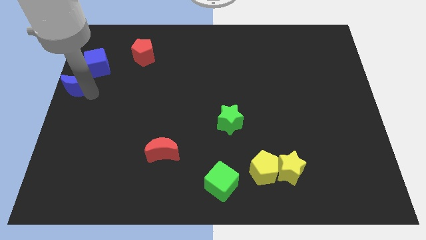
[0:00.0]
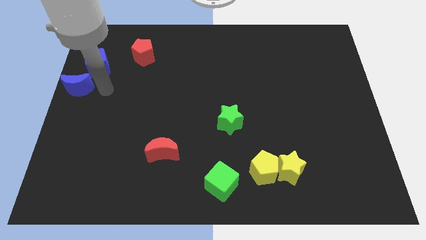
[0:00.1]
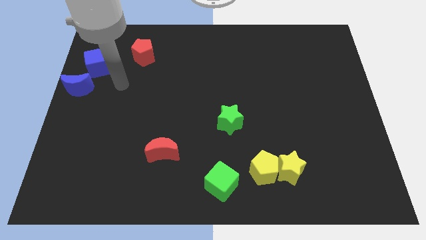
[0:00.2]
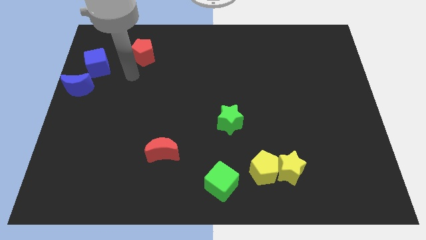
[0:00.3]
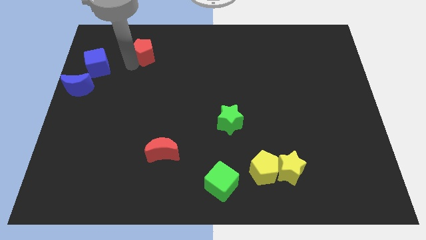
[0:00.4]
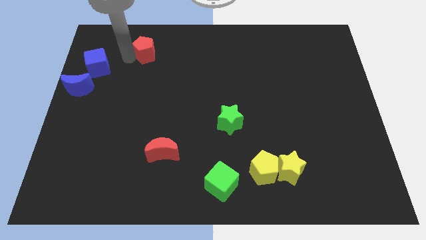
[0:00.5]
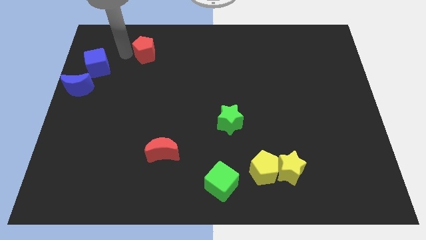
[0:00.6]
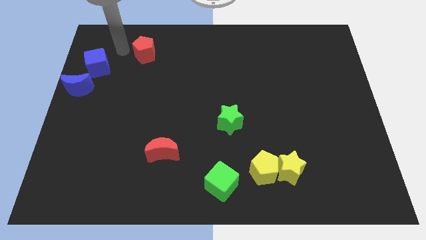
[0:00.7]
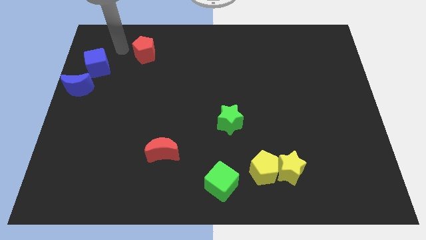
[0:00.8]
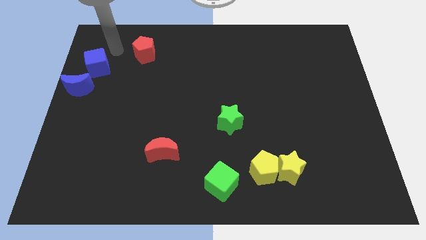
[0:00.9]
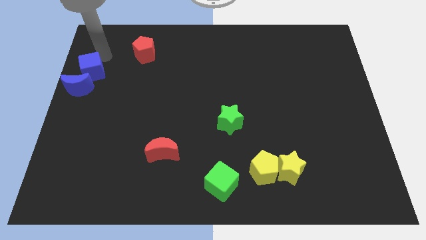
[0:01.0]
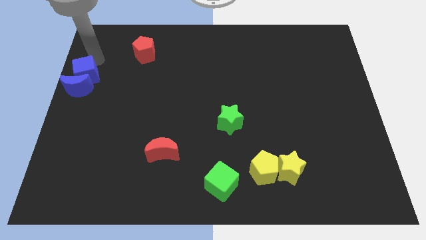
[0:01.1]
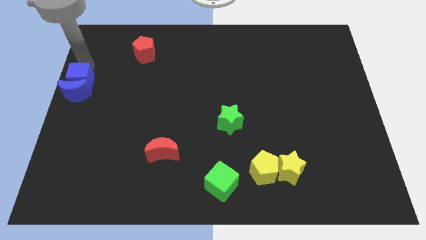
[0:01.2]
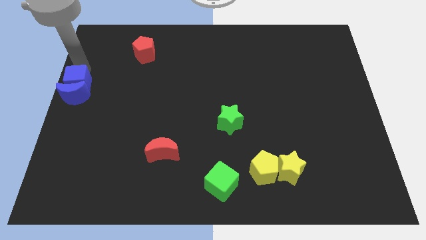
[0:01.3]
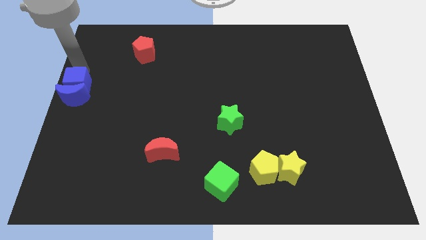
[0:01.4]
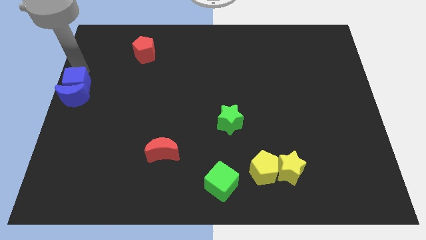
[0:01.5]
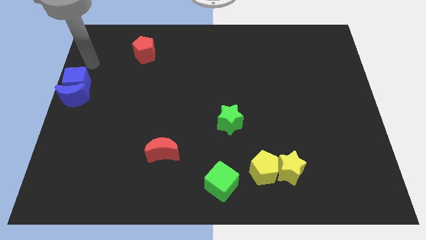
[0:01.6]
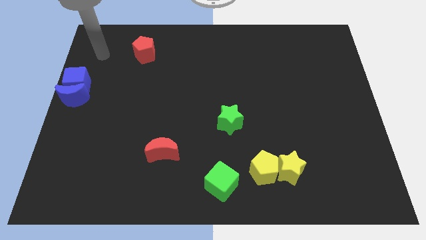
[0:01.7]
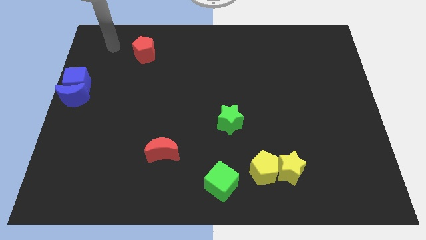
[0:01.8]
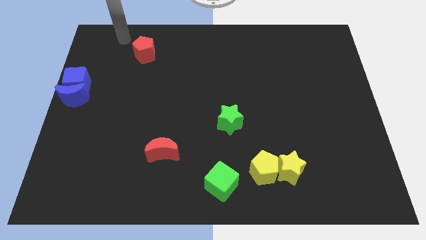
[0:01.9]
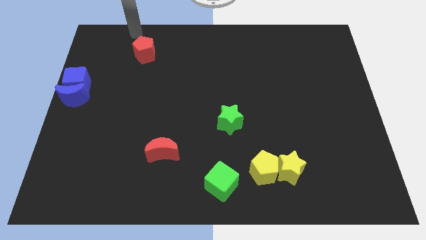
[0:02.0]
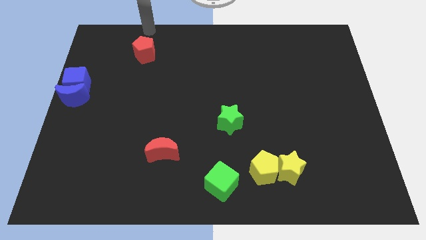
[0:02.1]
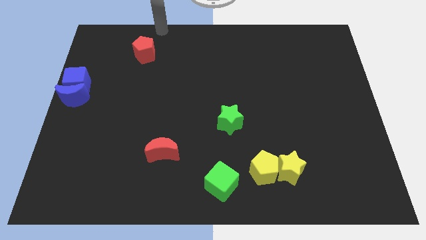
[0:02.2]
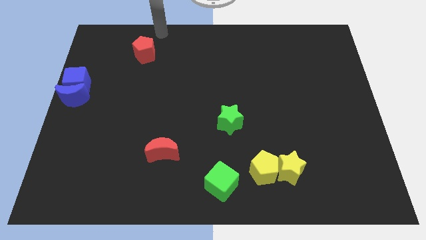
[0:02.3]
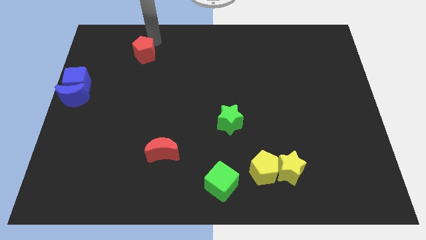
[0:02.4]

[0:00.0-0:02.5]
move the blue cube into the blue crescent

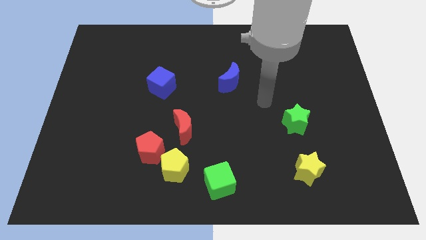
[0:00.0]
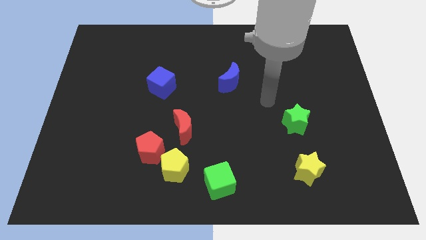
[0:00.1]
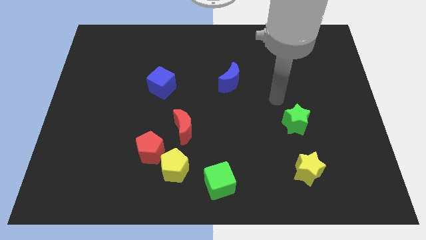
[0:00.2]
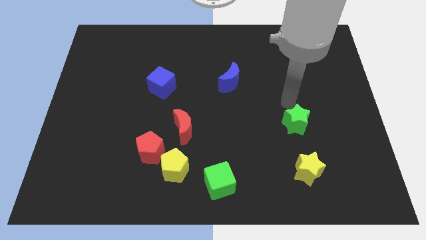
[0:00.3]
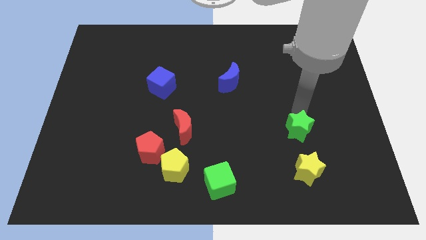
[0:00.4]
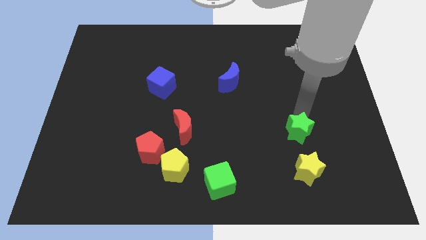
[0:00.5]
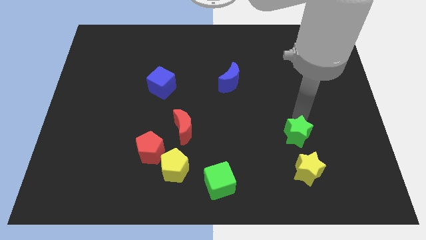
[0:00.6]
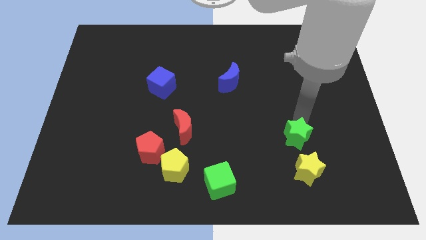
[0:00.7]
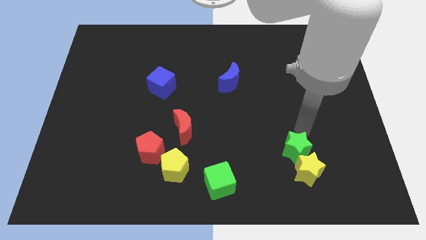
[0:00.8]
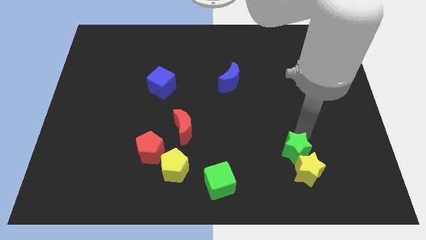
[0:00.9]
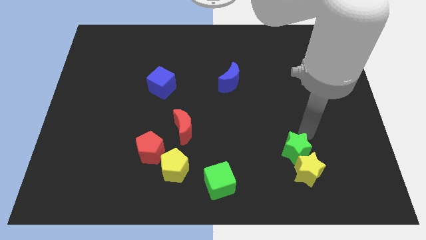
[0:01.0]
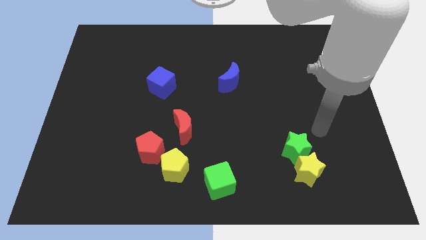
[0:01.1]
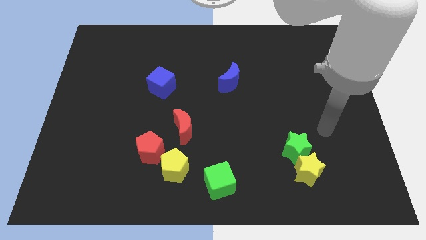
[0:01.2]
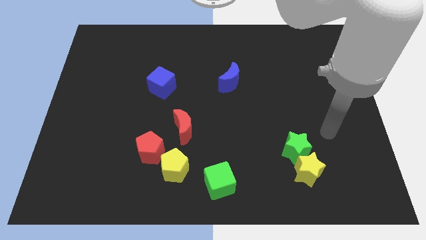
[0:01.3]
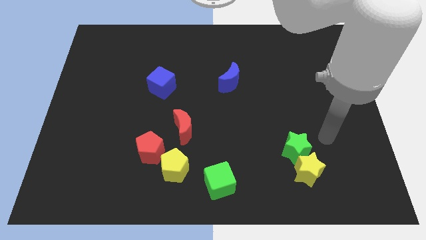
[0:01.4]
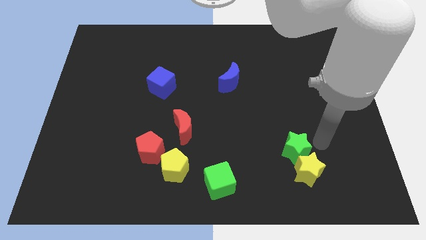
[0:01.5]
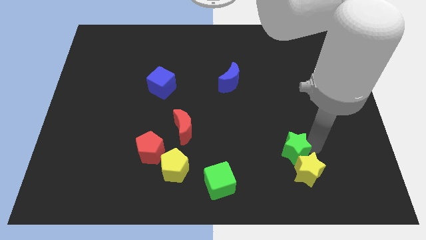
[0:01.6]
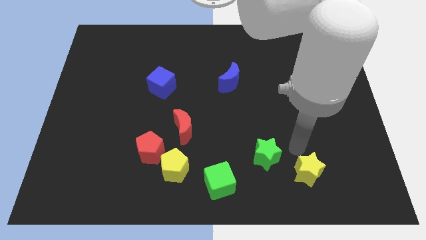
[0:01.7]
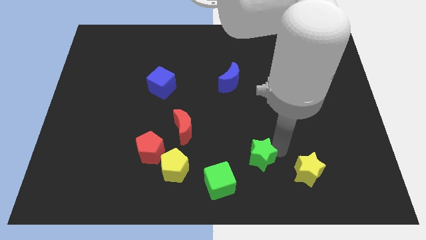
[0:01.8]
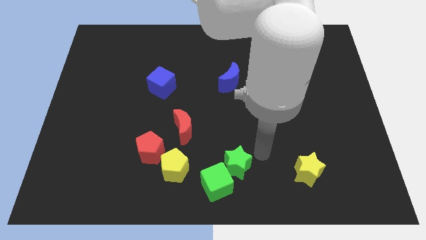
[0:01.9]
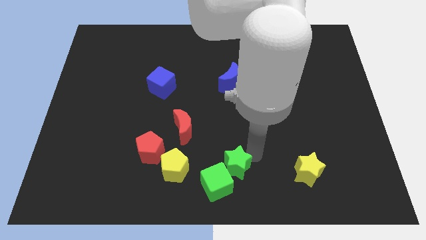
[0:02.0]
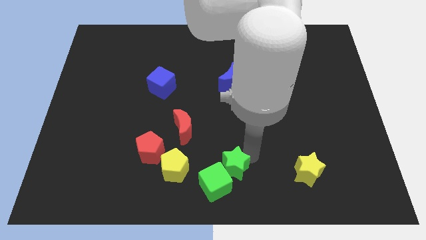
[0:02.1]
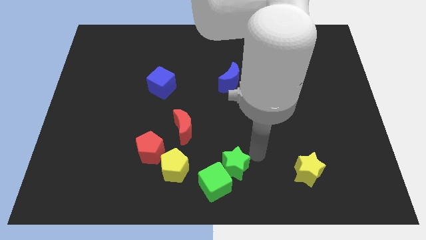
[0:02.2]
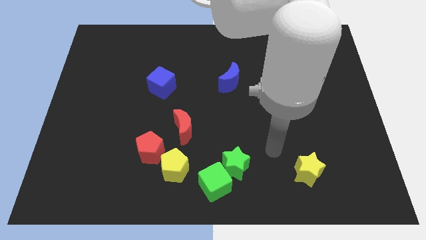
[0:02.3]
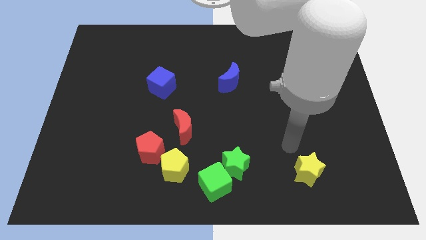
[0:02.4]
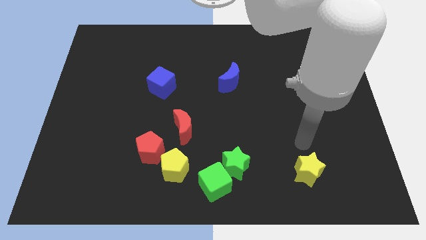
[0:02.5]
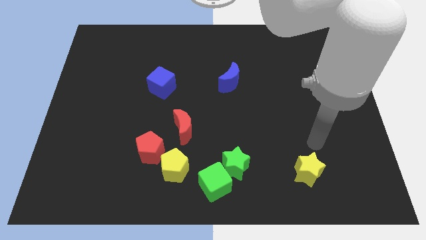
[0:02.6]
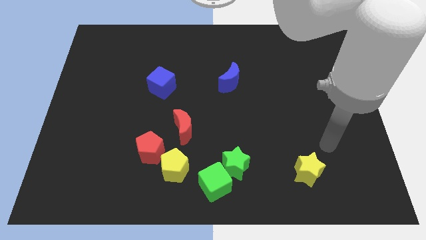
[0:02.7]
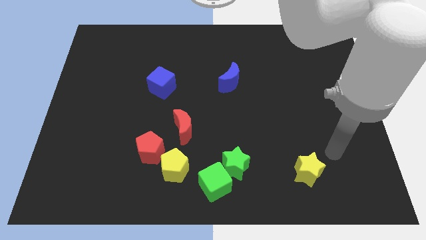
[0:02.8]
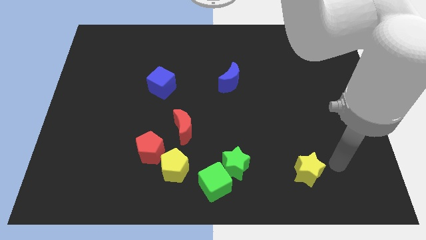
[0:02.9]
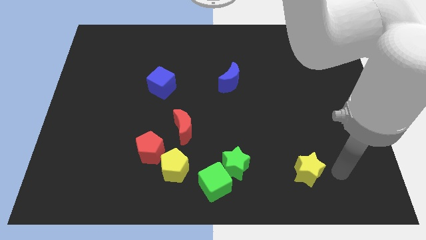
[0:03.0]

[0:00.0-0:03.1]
move green star into green cube

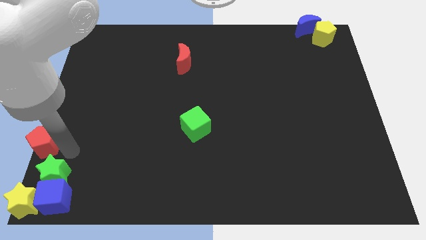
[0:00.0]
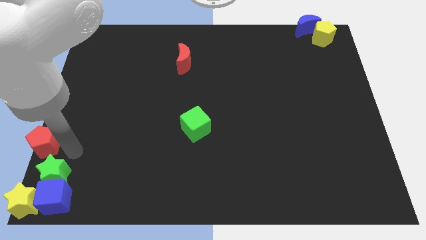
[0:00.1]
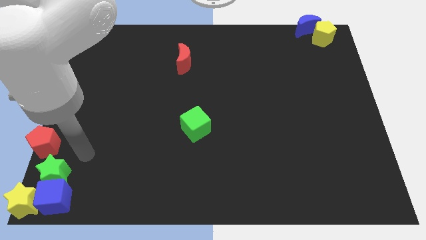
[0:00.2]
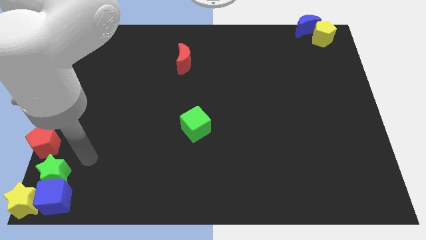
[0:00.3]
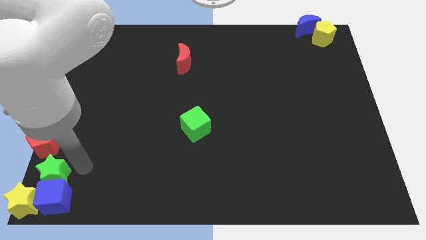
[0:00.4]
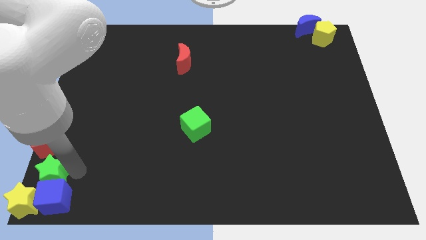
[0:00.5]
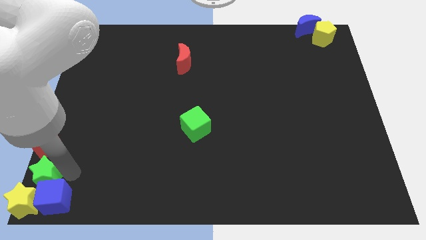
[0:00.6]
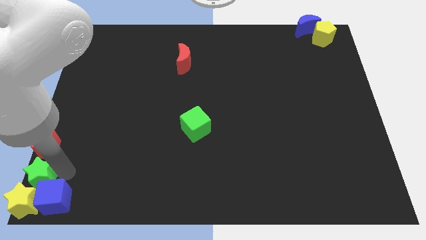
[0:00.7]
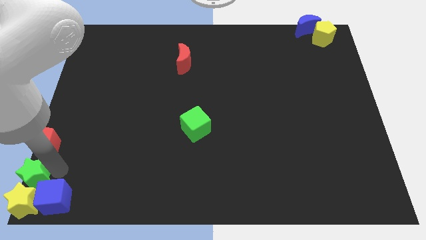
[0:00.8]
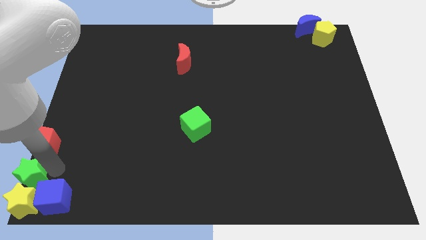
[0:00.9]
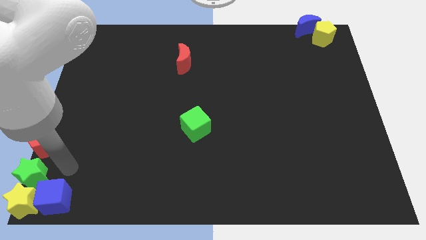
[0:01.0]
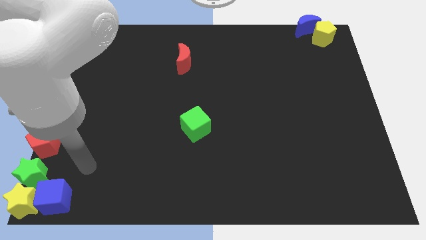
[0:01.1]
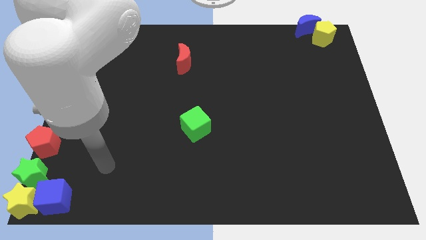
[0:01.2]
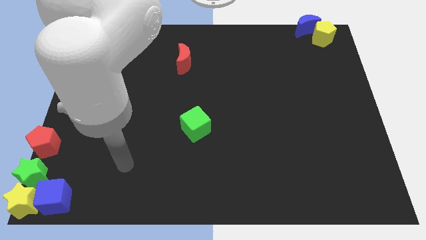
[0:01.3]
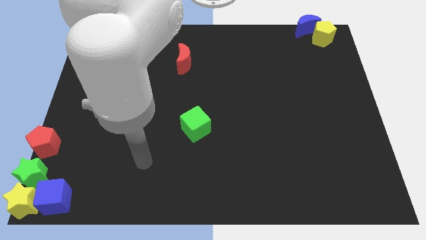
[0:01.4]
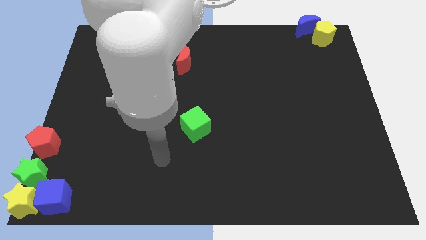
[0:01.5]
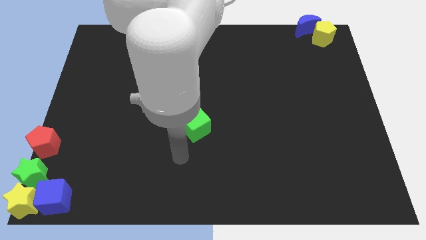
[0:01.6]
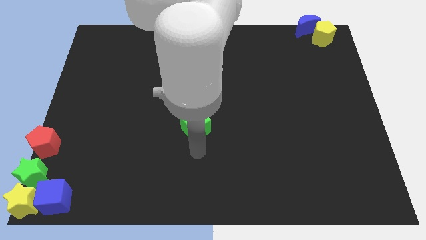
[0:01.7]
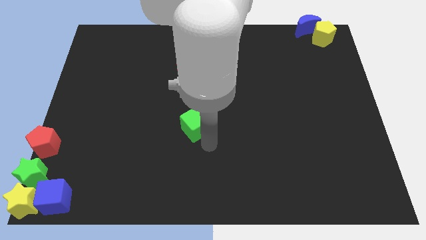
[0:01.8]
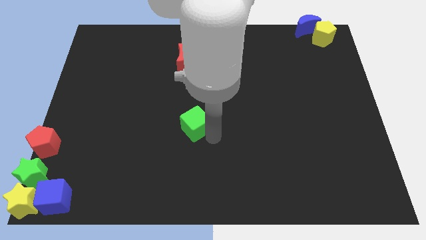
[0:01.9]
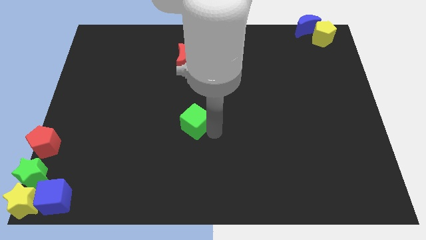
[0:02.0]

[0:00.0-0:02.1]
touch the bottom of the green cube

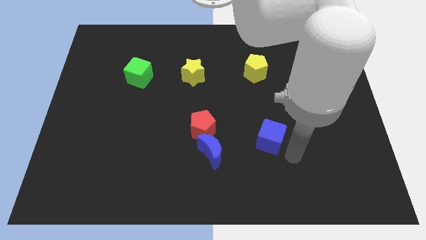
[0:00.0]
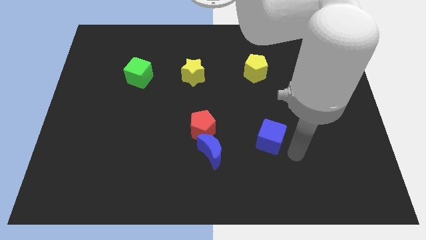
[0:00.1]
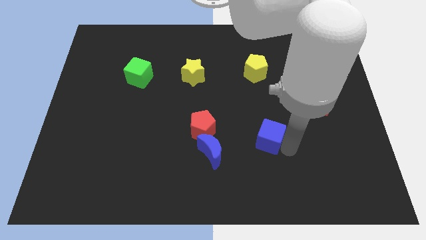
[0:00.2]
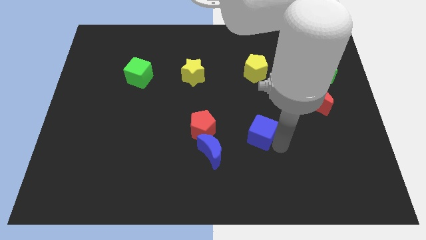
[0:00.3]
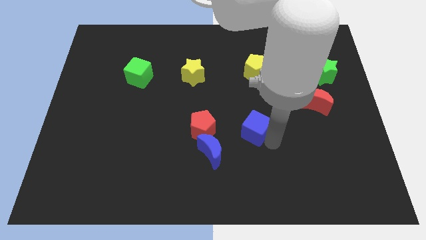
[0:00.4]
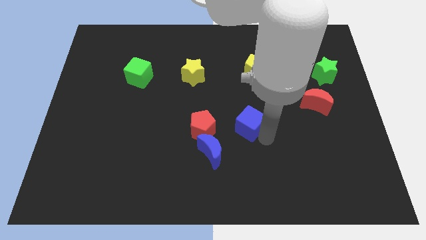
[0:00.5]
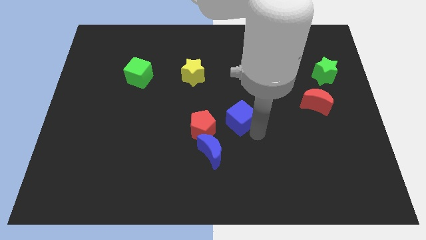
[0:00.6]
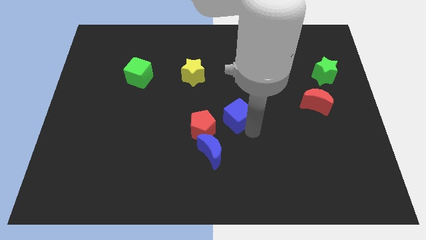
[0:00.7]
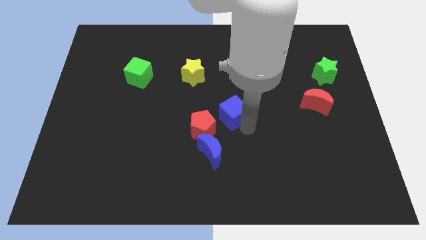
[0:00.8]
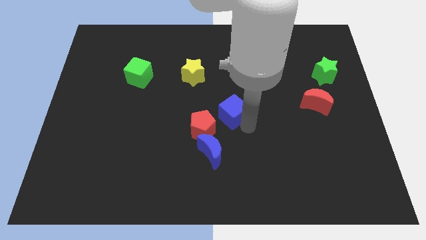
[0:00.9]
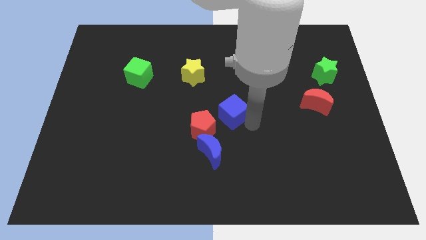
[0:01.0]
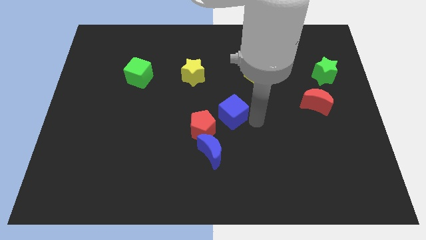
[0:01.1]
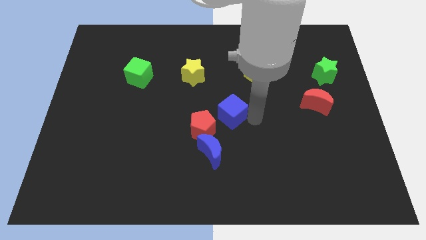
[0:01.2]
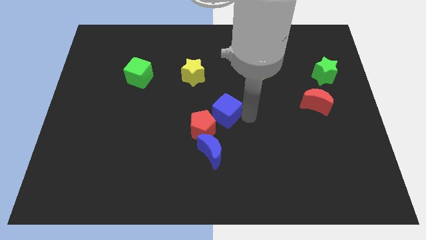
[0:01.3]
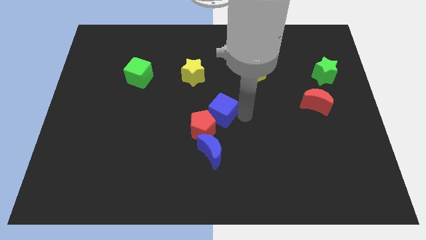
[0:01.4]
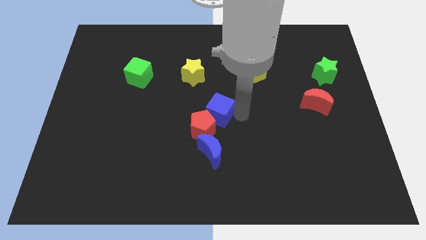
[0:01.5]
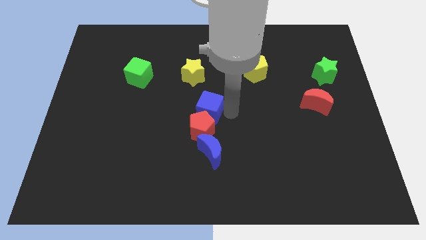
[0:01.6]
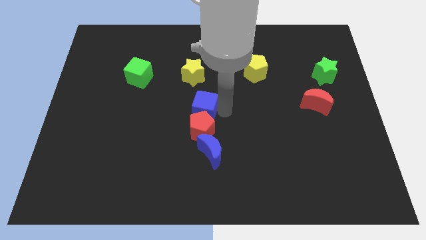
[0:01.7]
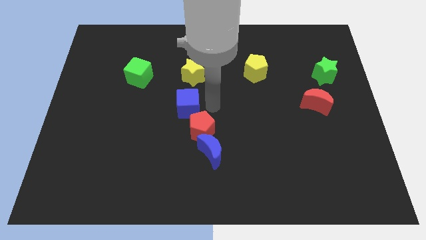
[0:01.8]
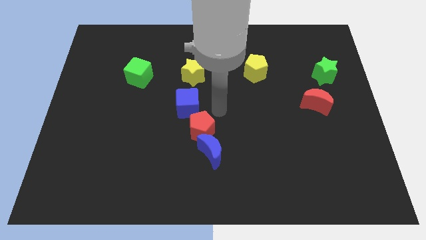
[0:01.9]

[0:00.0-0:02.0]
place the blue cube between yellow star and red pentagon
